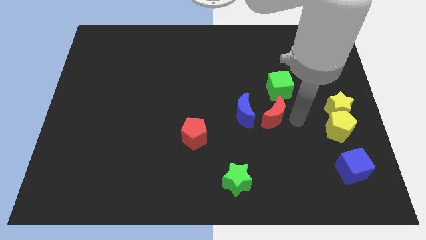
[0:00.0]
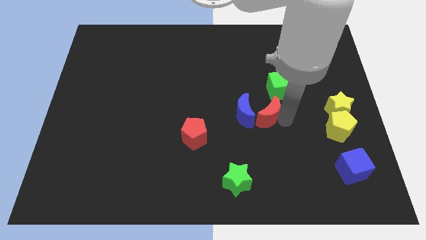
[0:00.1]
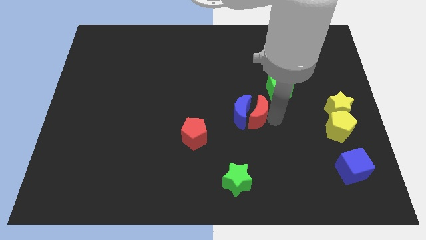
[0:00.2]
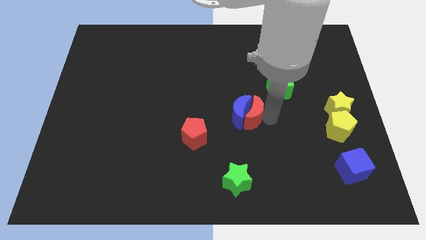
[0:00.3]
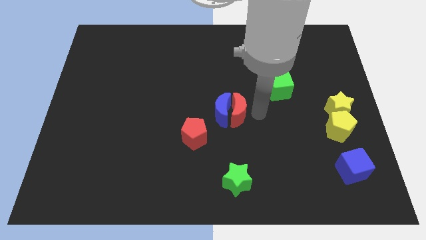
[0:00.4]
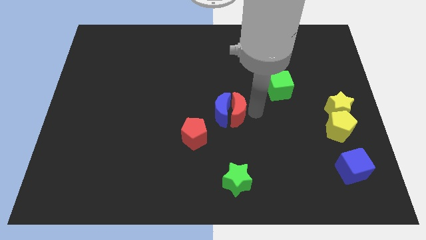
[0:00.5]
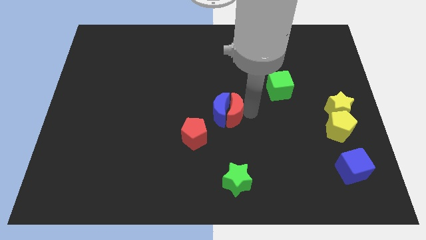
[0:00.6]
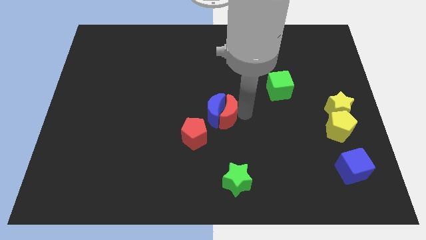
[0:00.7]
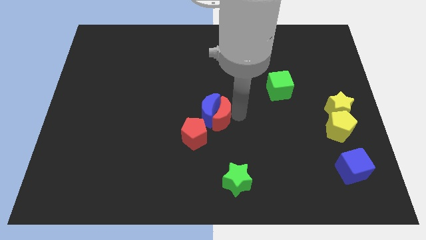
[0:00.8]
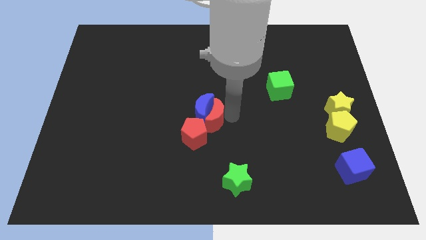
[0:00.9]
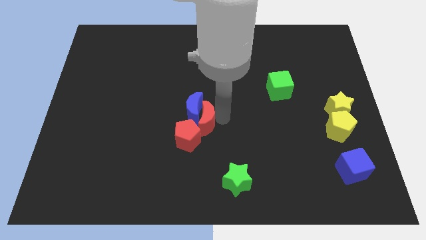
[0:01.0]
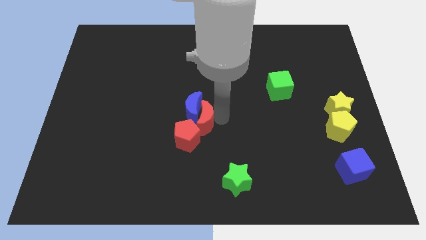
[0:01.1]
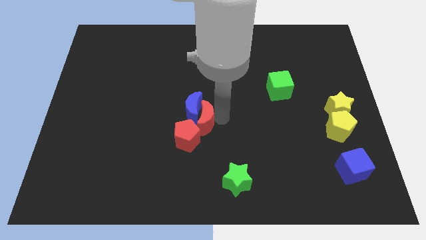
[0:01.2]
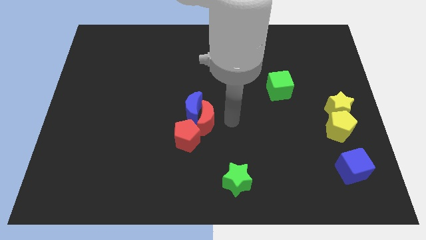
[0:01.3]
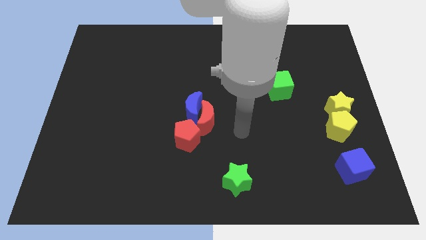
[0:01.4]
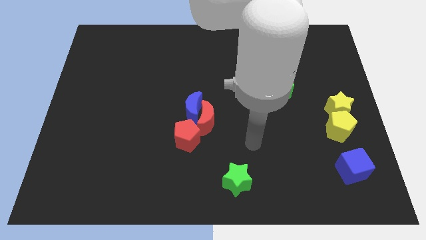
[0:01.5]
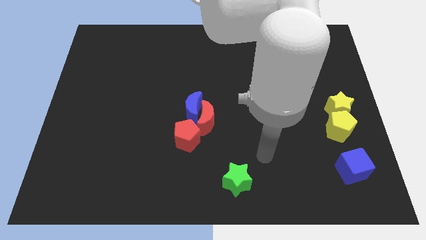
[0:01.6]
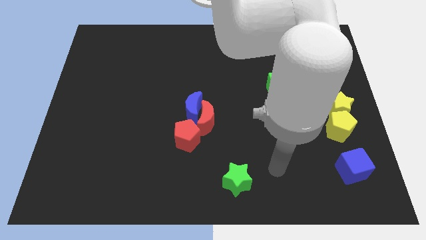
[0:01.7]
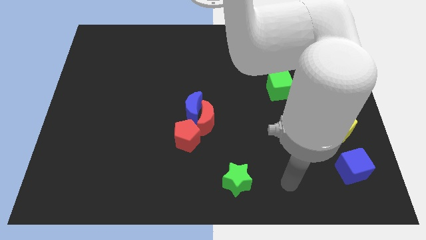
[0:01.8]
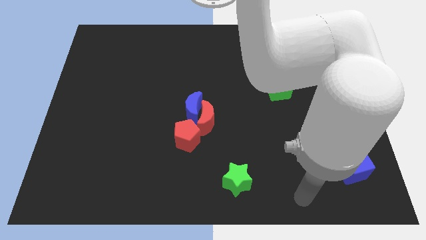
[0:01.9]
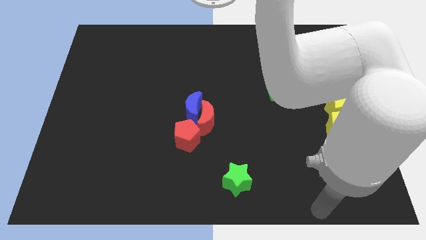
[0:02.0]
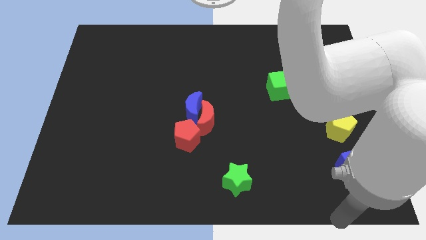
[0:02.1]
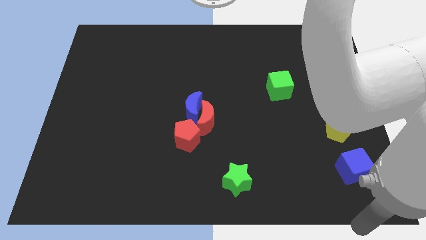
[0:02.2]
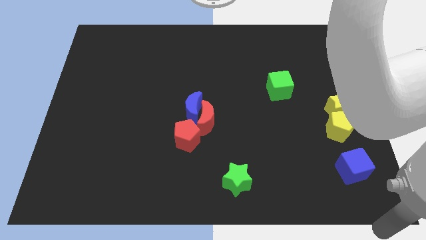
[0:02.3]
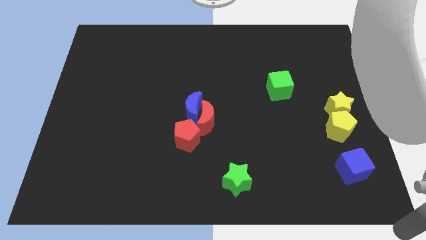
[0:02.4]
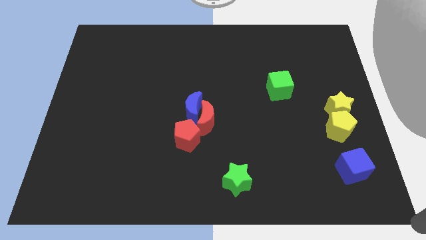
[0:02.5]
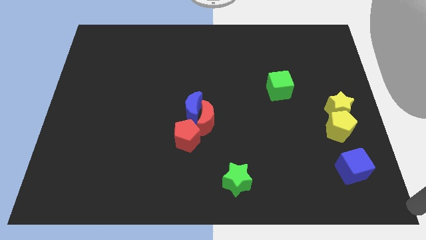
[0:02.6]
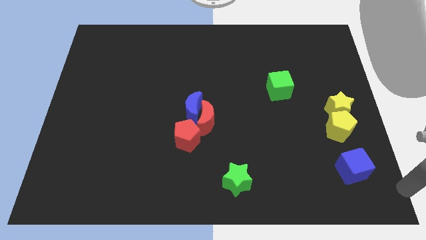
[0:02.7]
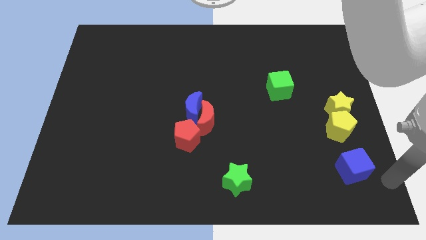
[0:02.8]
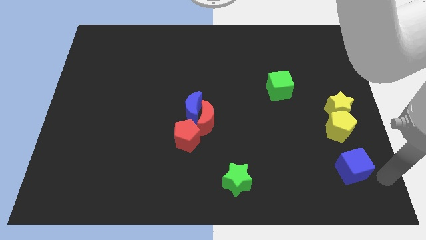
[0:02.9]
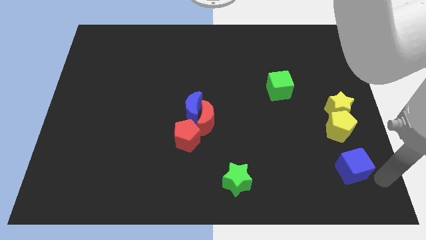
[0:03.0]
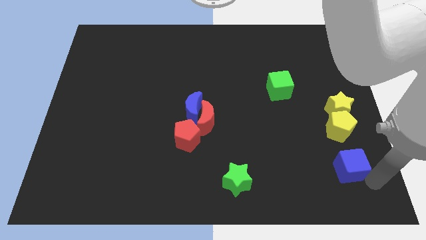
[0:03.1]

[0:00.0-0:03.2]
place both the crescents at the center of the board

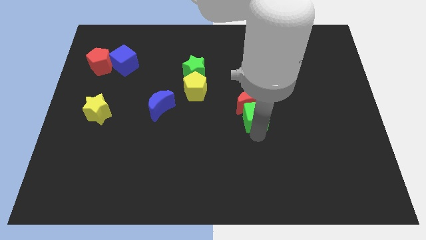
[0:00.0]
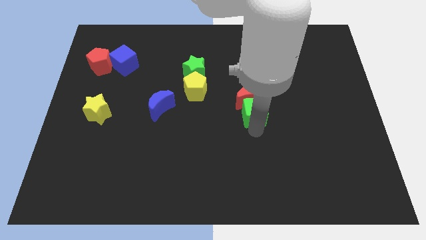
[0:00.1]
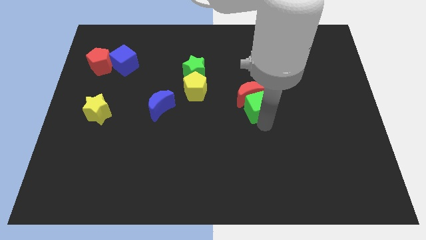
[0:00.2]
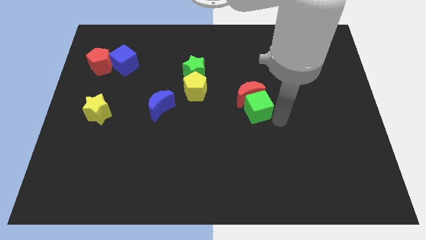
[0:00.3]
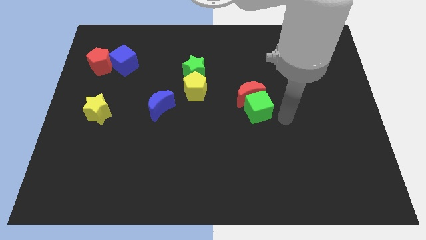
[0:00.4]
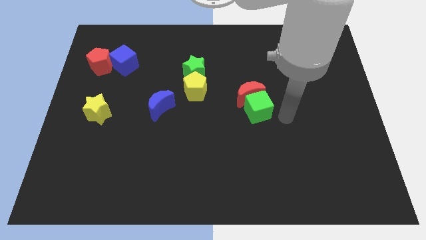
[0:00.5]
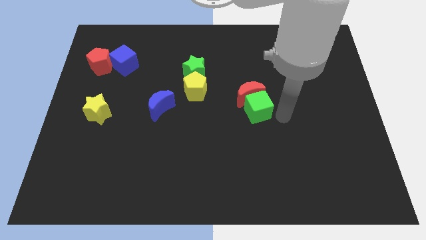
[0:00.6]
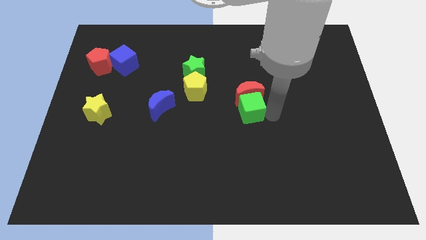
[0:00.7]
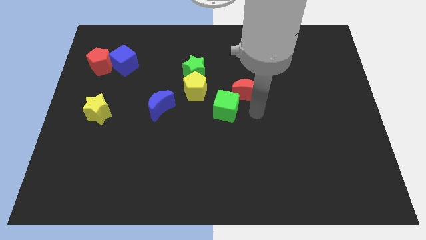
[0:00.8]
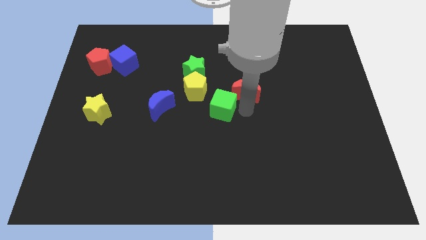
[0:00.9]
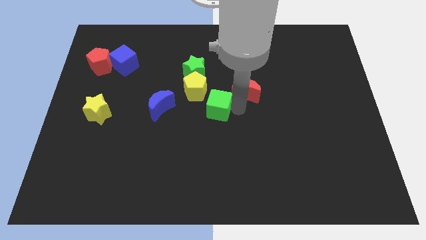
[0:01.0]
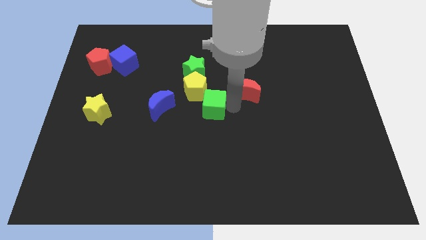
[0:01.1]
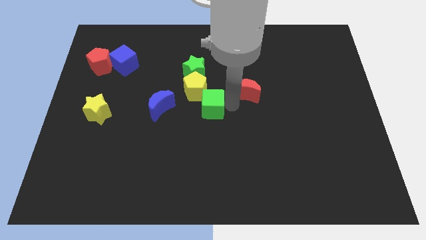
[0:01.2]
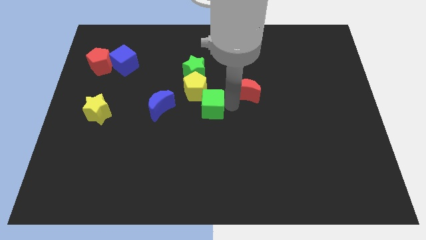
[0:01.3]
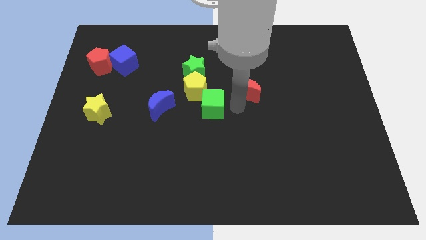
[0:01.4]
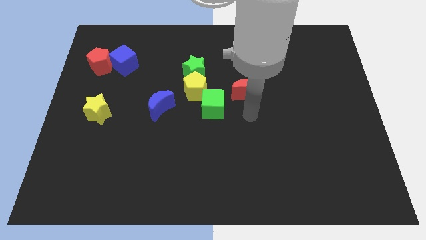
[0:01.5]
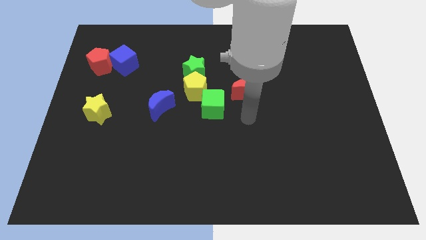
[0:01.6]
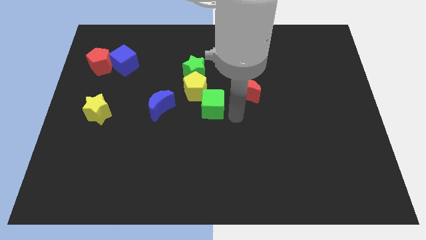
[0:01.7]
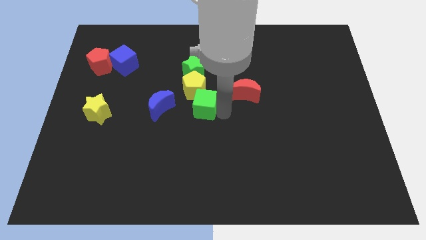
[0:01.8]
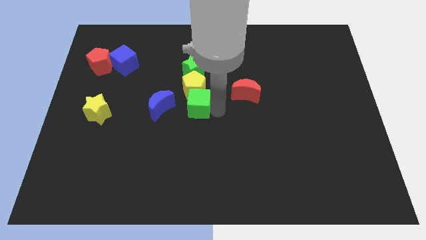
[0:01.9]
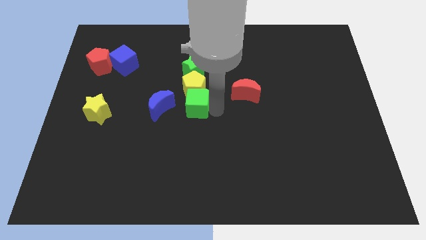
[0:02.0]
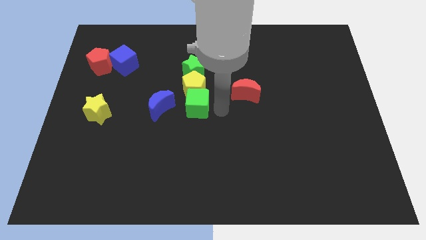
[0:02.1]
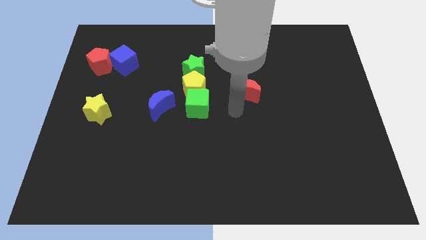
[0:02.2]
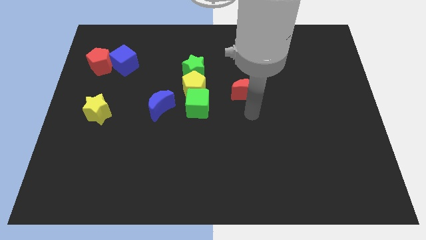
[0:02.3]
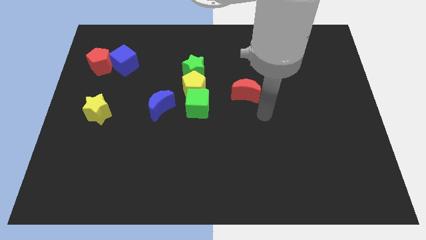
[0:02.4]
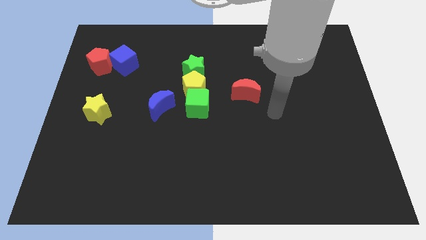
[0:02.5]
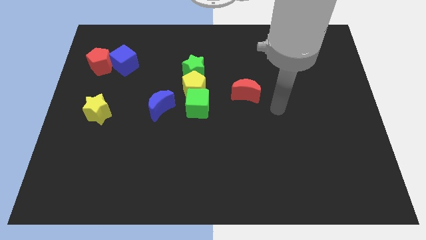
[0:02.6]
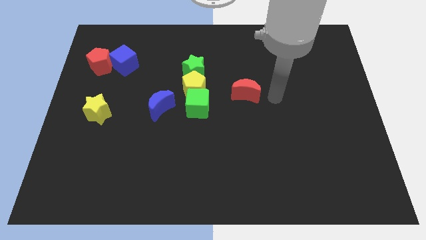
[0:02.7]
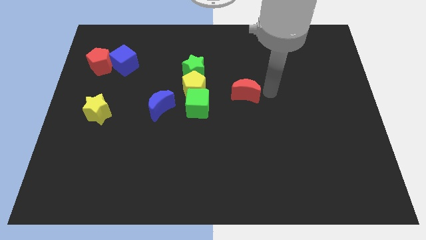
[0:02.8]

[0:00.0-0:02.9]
push the green cube into the bottom of the yellow pentagon

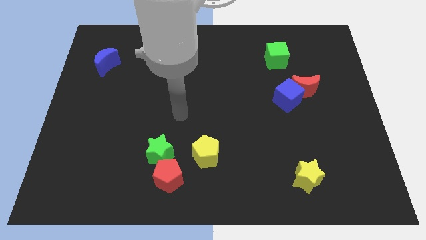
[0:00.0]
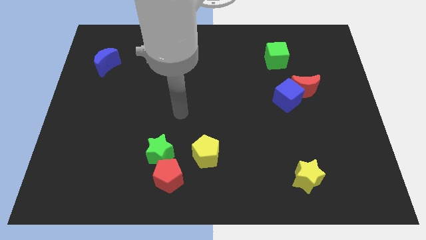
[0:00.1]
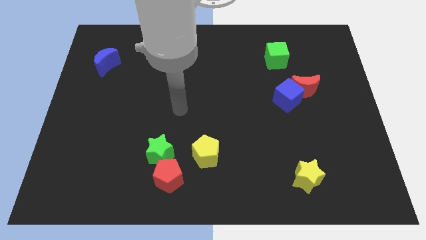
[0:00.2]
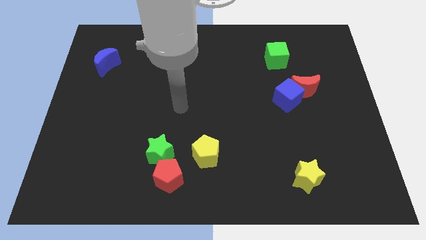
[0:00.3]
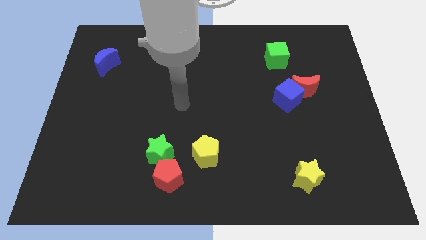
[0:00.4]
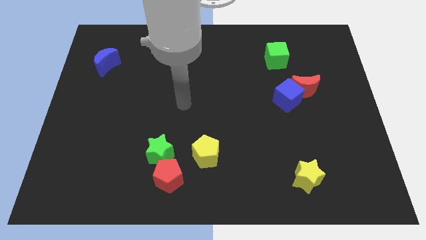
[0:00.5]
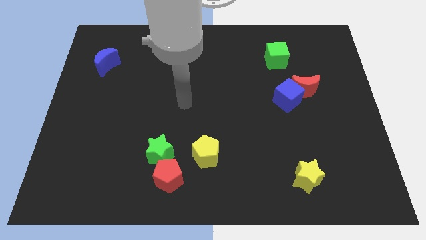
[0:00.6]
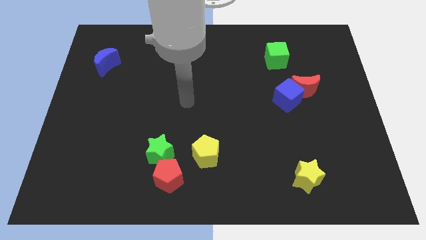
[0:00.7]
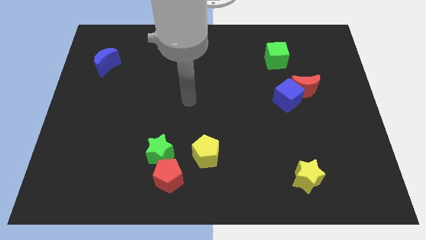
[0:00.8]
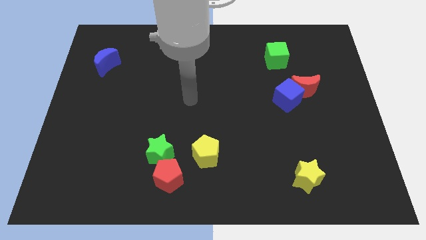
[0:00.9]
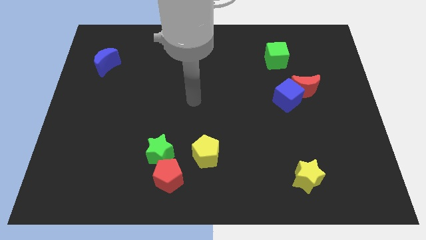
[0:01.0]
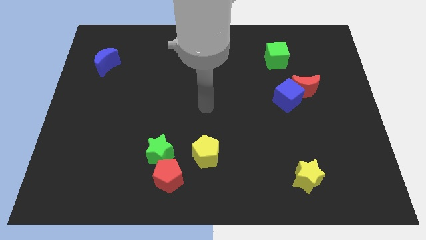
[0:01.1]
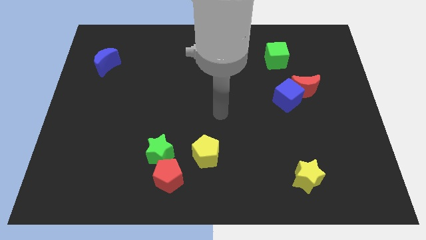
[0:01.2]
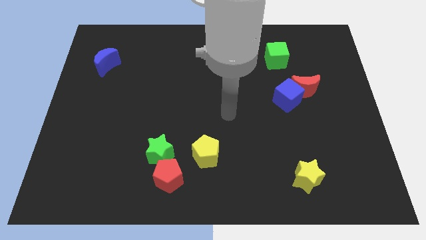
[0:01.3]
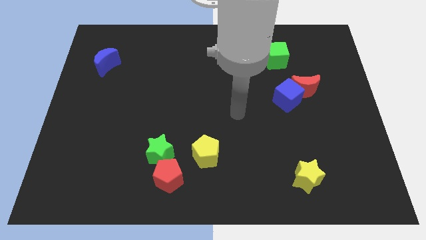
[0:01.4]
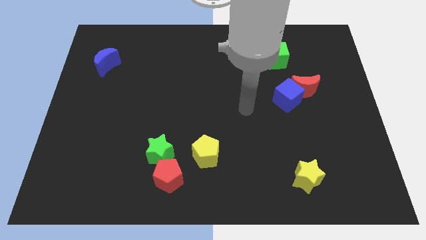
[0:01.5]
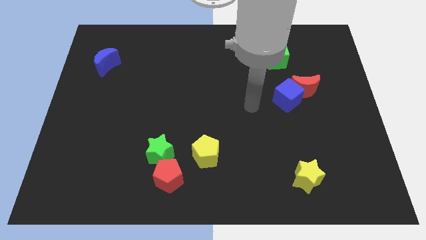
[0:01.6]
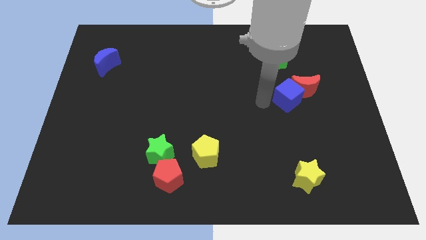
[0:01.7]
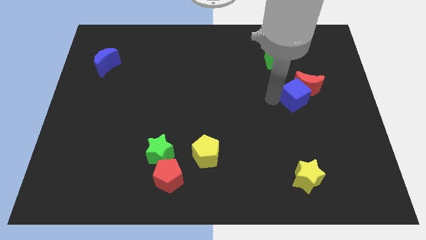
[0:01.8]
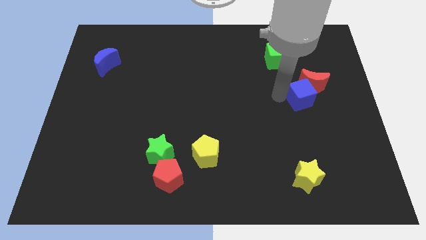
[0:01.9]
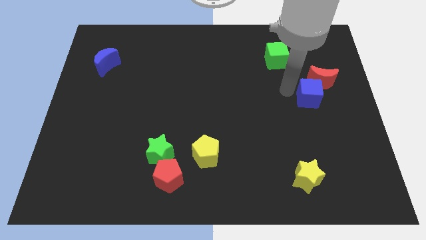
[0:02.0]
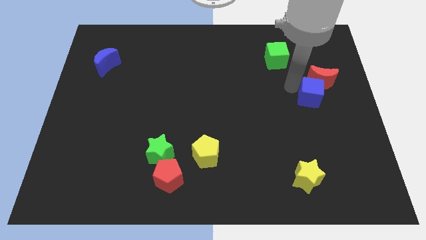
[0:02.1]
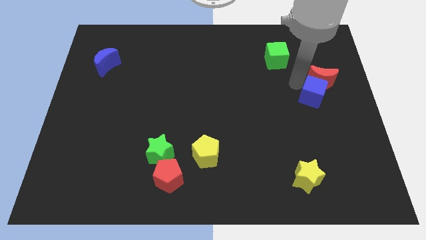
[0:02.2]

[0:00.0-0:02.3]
push blue cube in to red moon

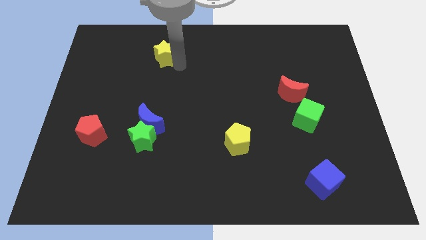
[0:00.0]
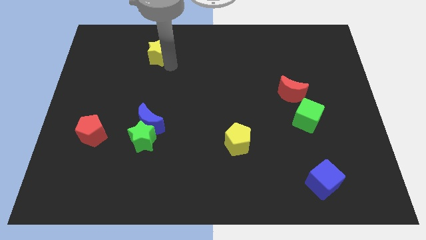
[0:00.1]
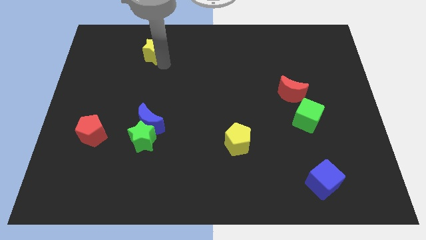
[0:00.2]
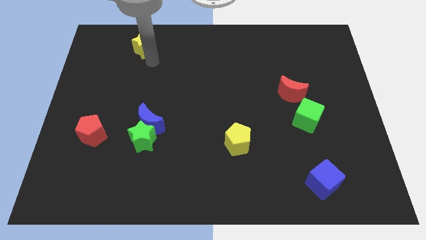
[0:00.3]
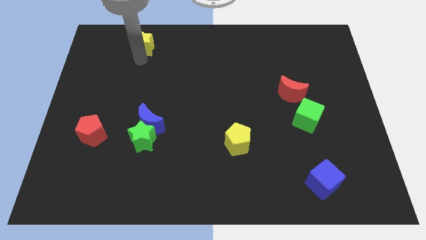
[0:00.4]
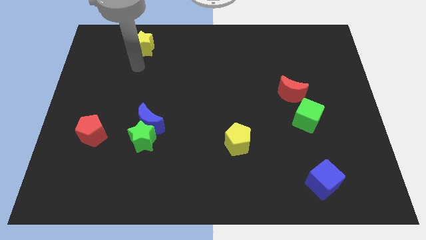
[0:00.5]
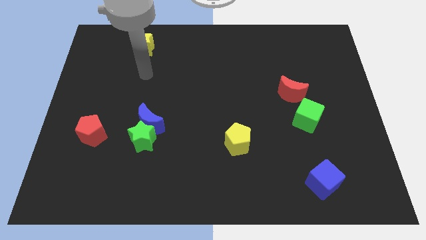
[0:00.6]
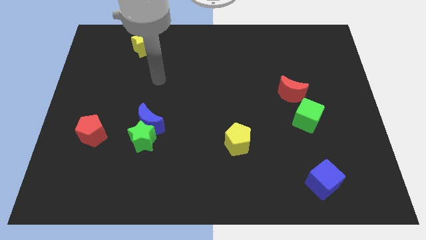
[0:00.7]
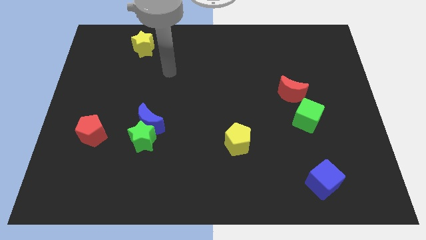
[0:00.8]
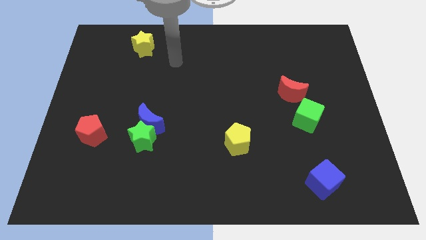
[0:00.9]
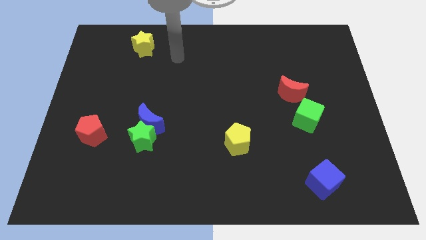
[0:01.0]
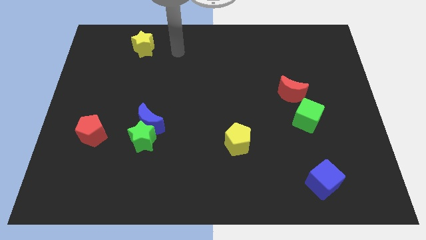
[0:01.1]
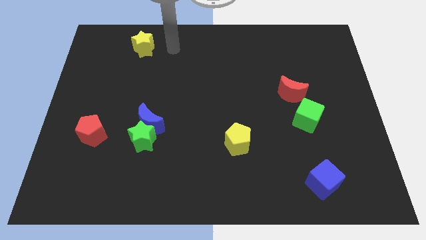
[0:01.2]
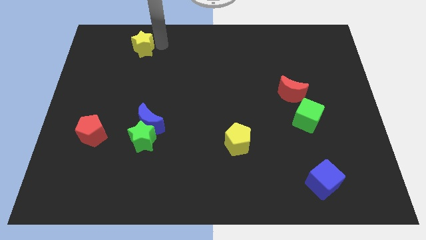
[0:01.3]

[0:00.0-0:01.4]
move the yellow star slightly towards the top left of the board
